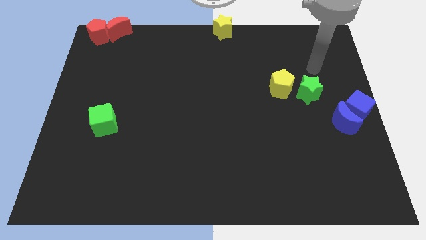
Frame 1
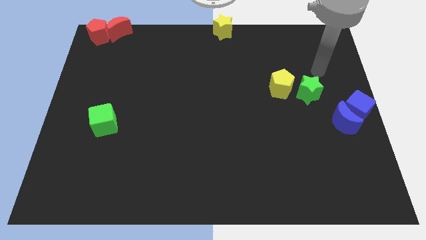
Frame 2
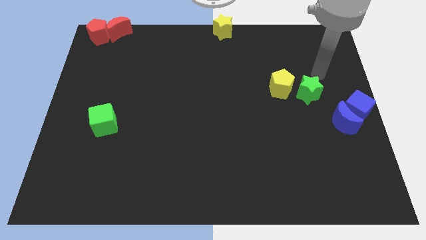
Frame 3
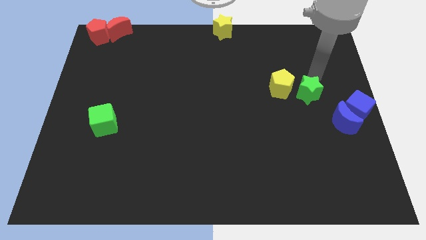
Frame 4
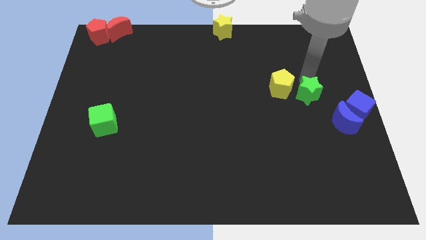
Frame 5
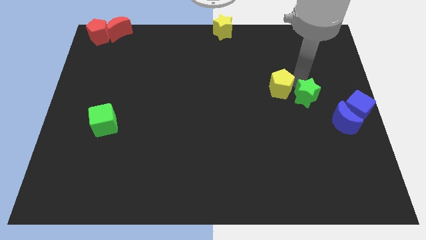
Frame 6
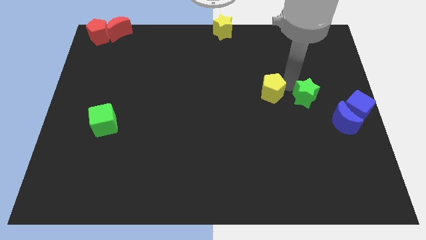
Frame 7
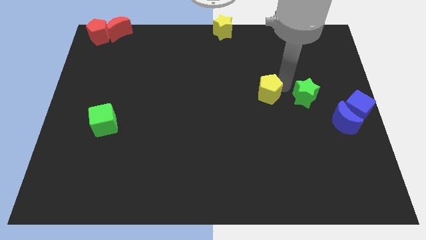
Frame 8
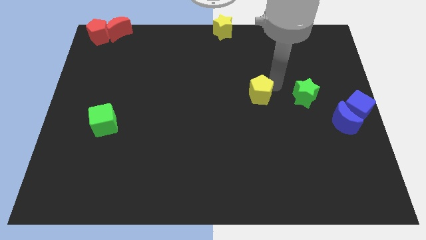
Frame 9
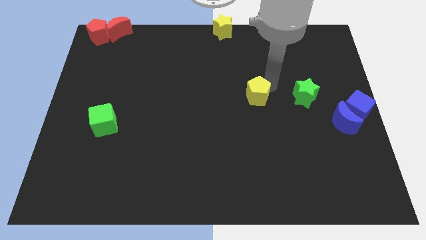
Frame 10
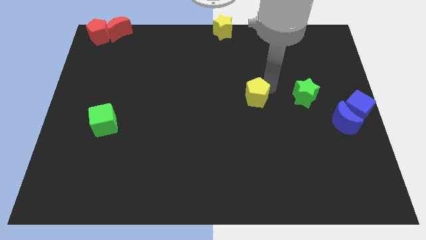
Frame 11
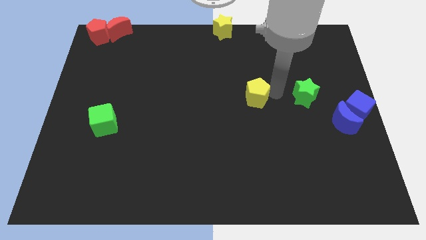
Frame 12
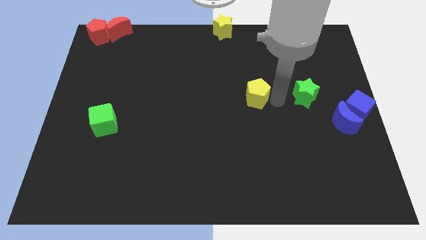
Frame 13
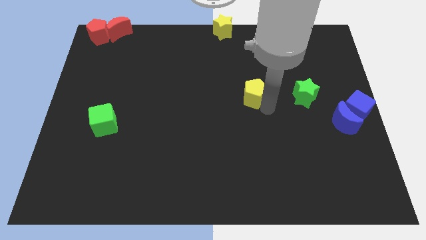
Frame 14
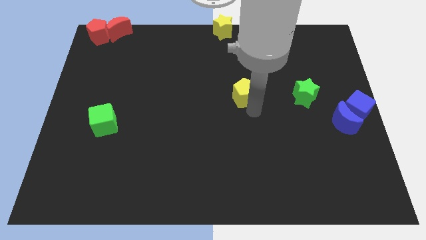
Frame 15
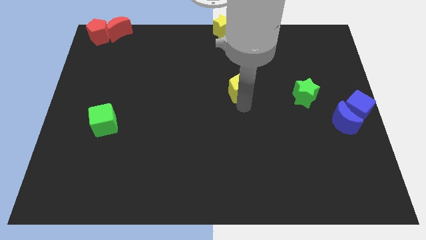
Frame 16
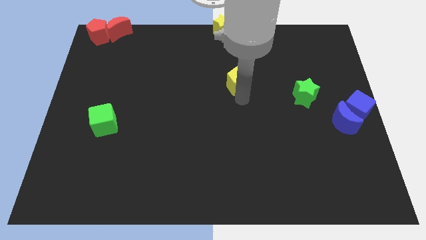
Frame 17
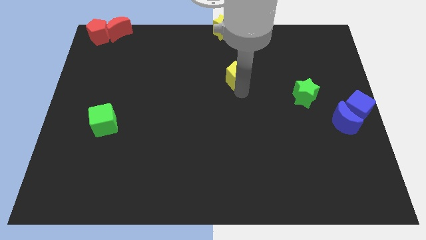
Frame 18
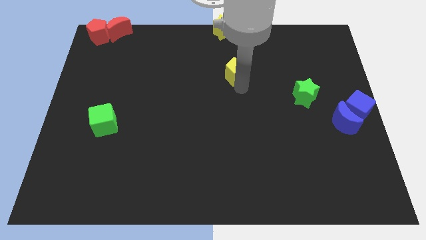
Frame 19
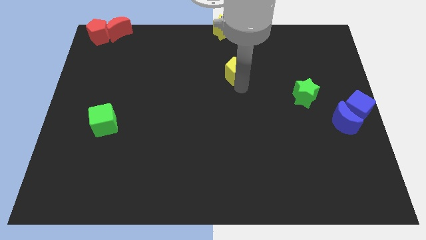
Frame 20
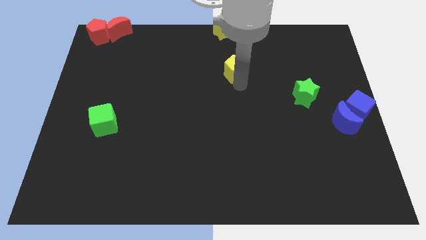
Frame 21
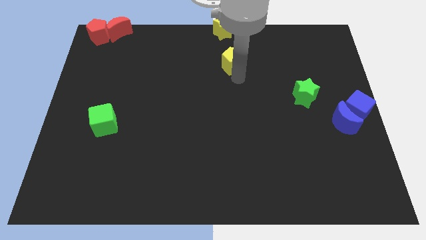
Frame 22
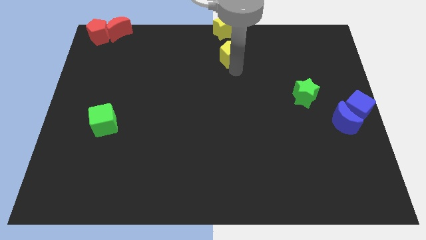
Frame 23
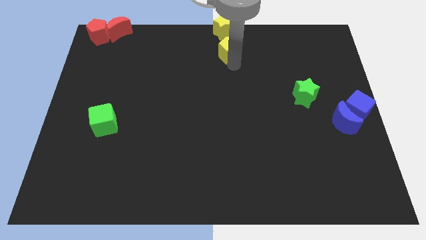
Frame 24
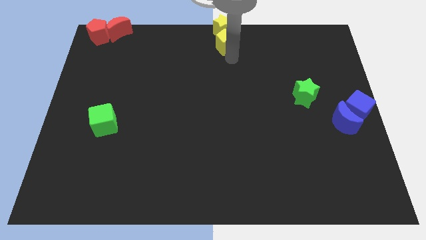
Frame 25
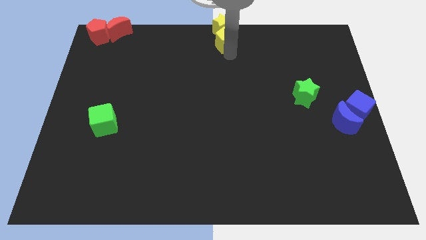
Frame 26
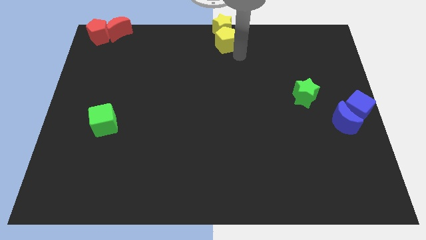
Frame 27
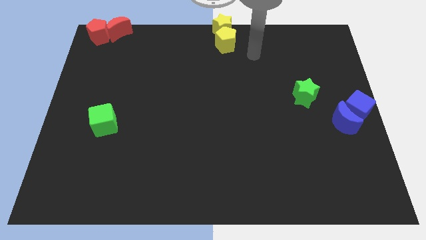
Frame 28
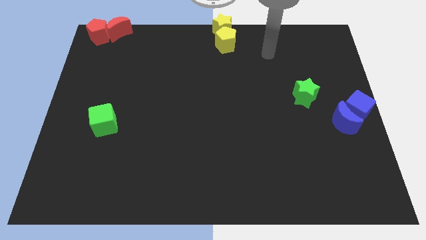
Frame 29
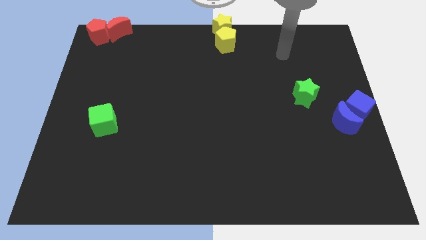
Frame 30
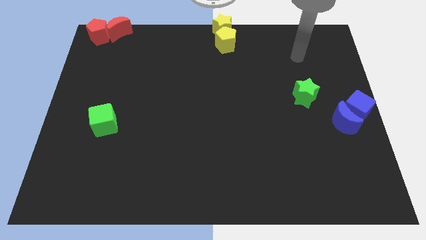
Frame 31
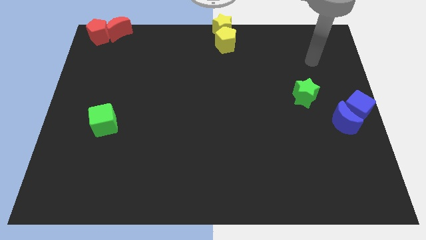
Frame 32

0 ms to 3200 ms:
move the yellow pentagon to the bottom side of the yellow star

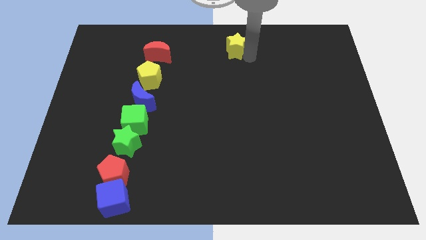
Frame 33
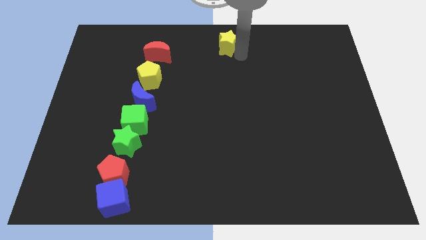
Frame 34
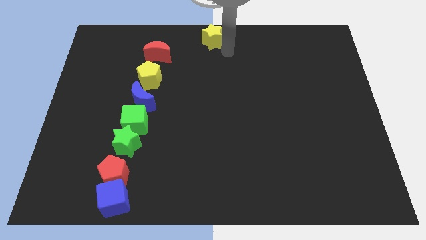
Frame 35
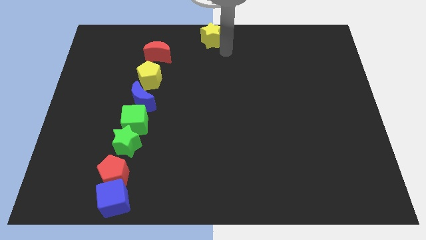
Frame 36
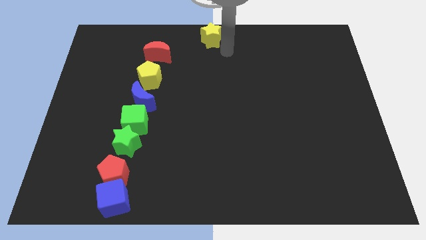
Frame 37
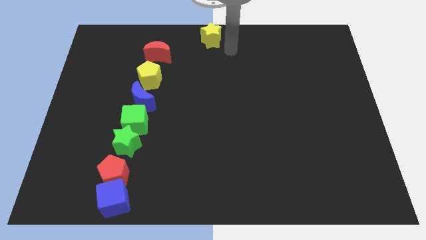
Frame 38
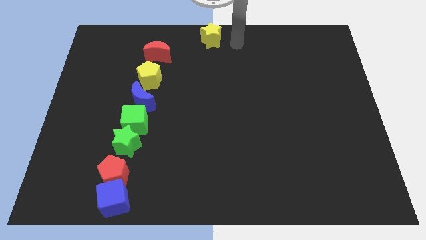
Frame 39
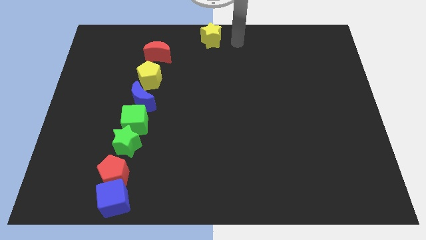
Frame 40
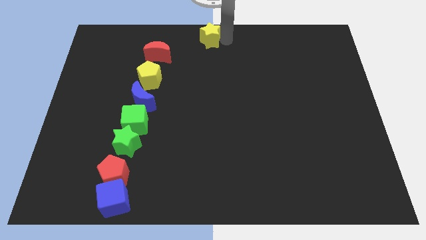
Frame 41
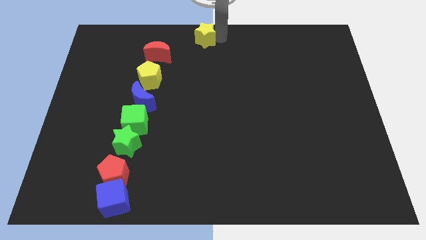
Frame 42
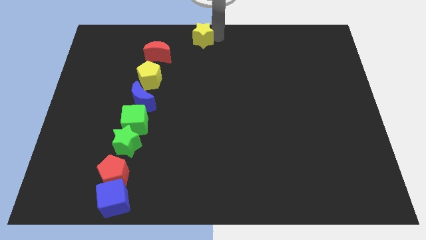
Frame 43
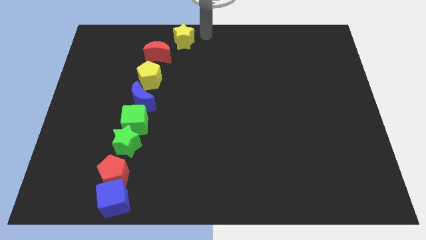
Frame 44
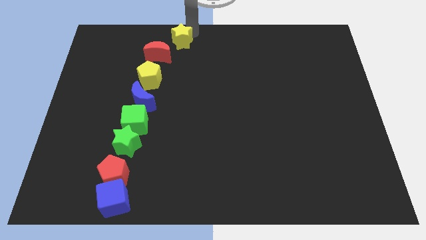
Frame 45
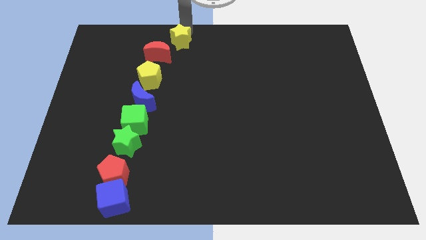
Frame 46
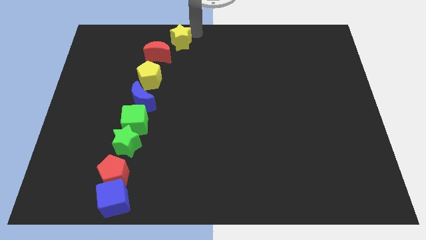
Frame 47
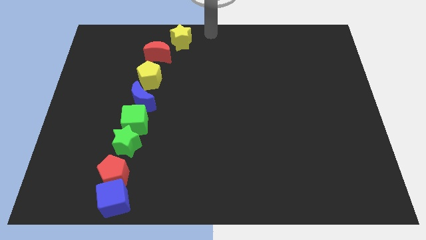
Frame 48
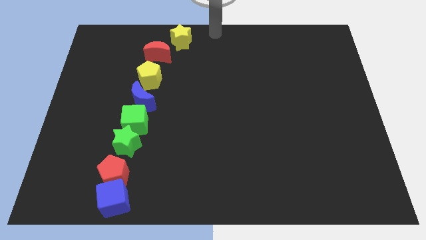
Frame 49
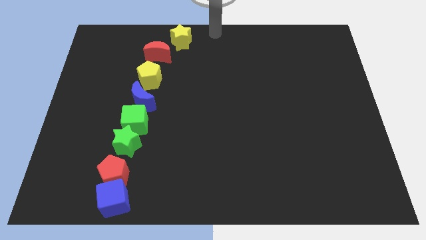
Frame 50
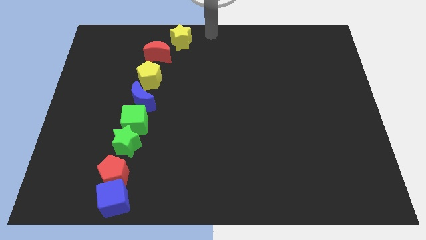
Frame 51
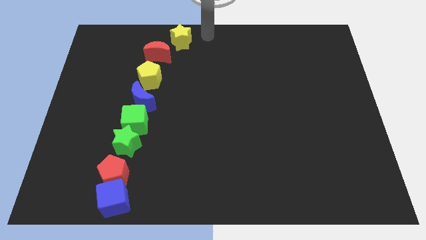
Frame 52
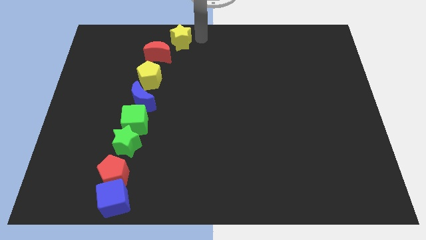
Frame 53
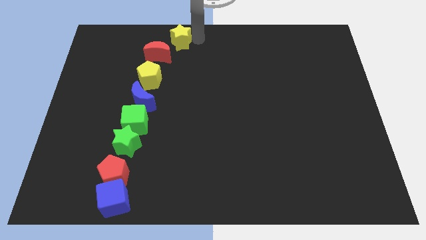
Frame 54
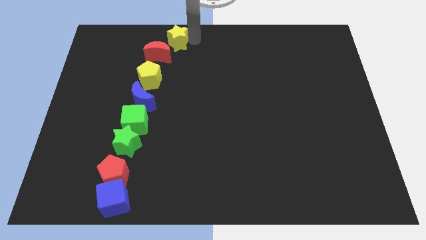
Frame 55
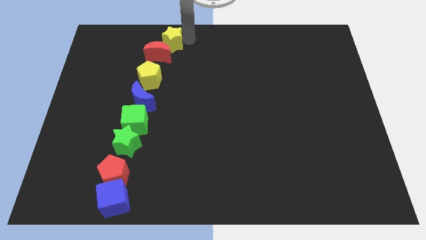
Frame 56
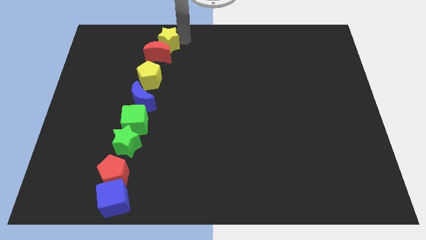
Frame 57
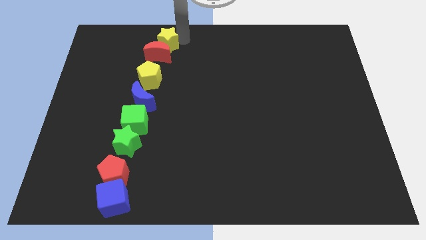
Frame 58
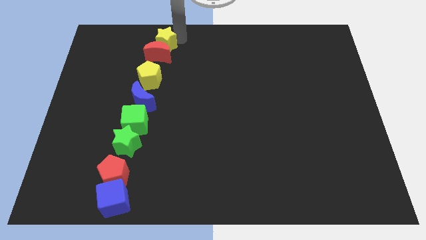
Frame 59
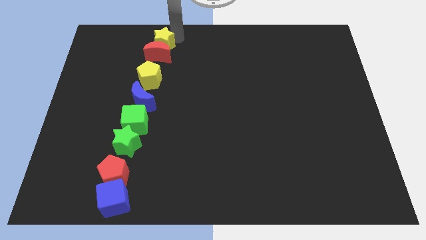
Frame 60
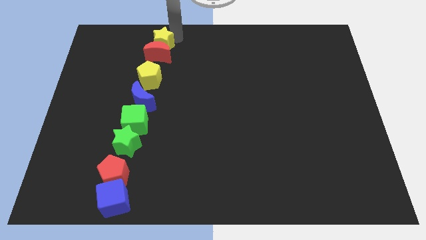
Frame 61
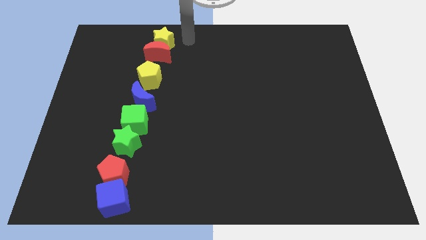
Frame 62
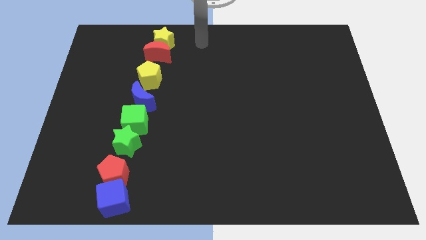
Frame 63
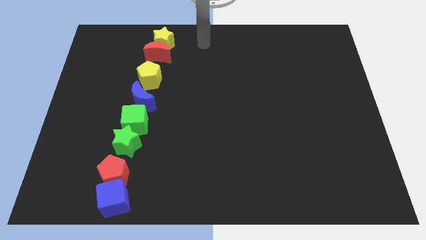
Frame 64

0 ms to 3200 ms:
place yellow star on top of red moon

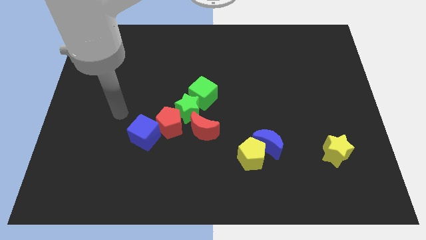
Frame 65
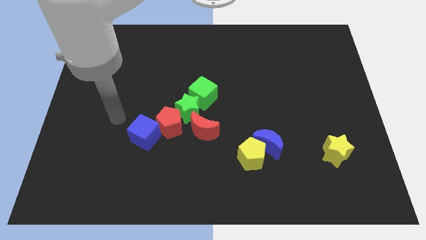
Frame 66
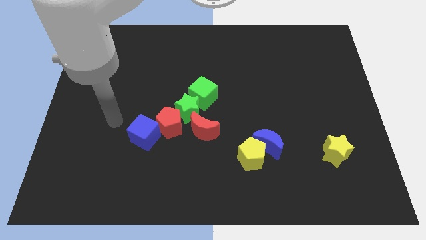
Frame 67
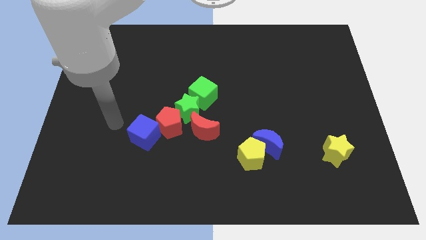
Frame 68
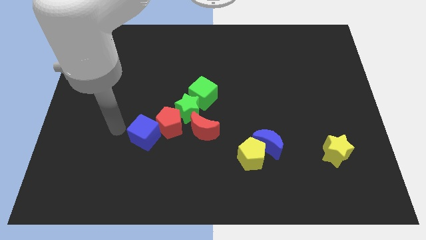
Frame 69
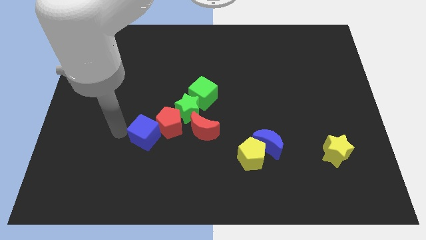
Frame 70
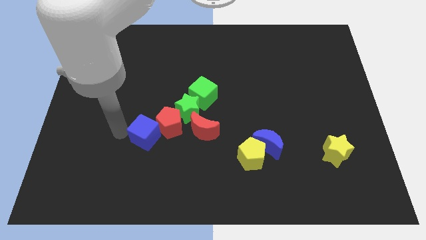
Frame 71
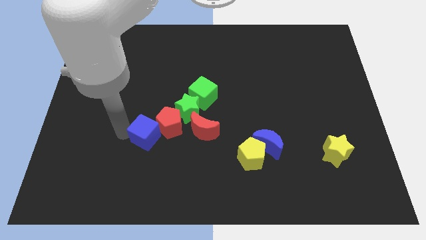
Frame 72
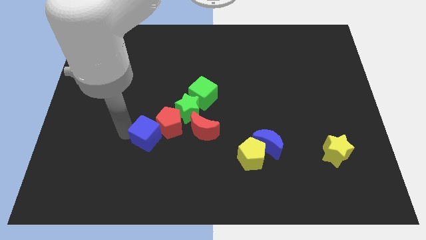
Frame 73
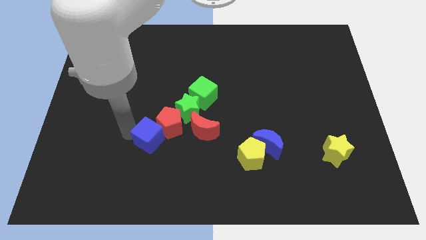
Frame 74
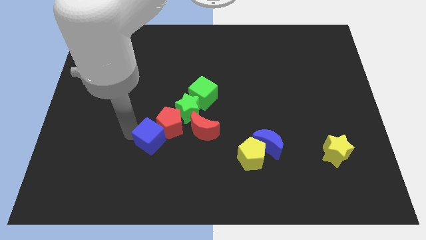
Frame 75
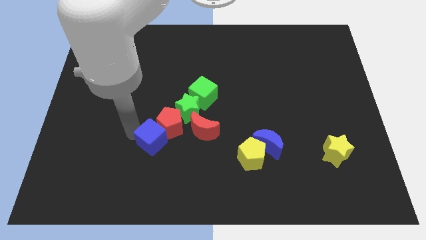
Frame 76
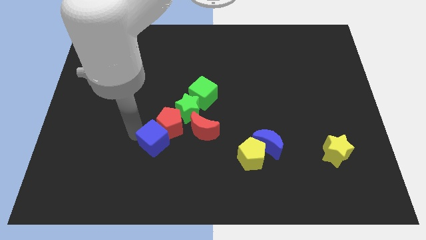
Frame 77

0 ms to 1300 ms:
adjust the blue cube to the bottom left to the red pentagon

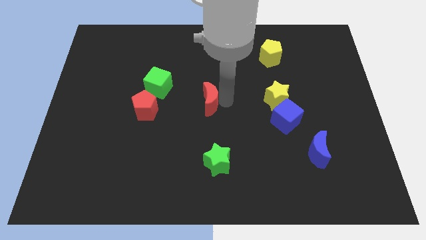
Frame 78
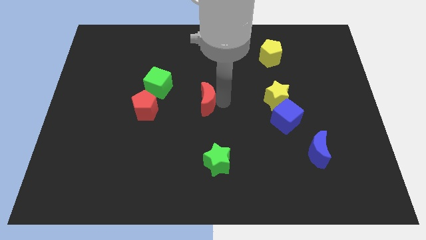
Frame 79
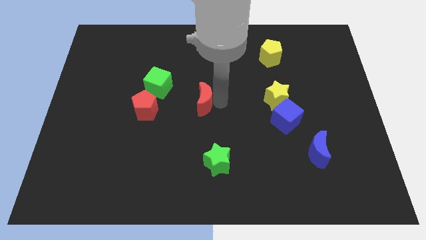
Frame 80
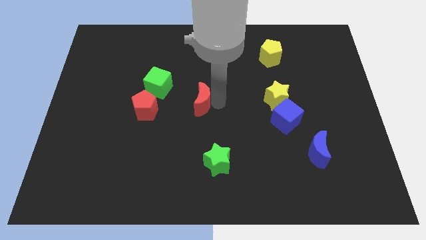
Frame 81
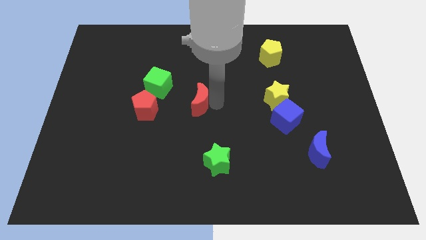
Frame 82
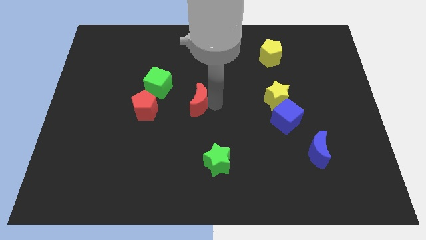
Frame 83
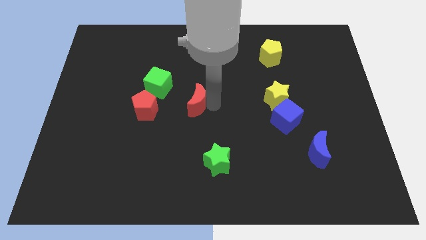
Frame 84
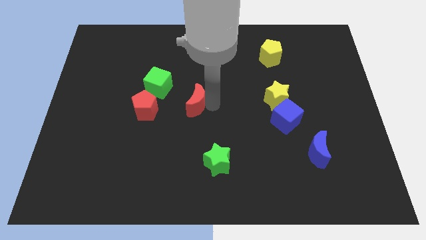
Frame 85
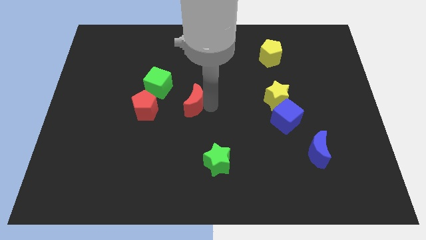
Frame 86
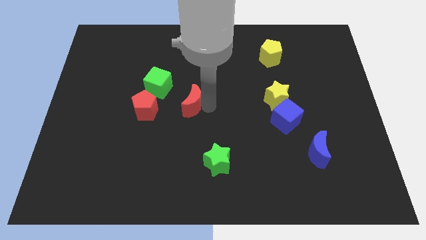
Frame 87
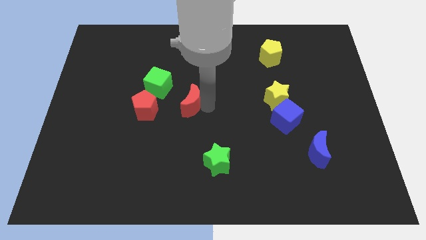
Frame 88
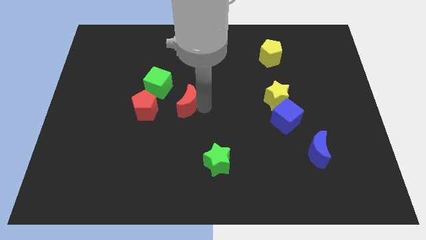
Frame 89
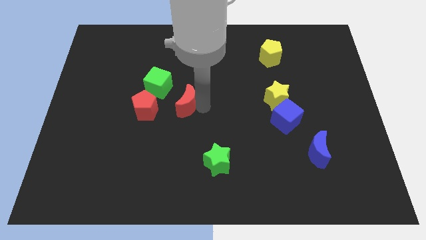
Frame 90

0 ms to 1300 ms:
push the red crescent towards the right side of the green cube and red pentagon
